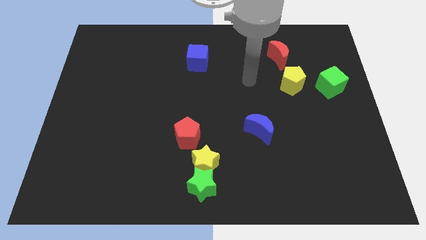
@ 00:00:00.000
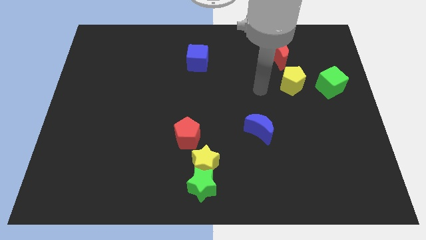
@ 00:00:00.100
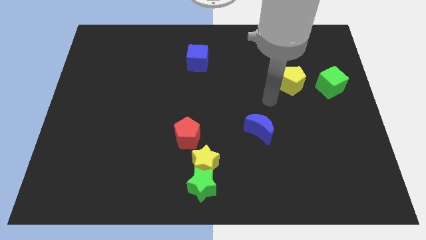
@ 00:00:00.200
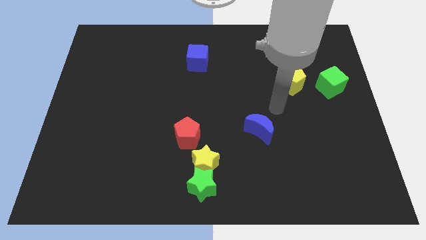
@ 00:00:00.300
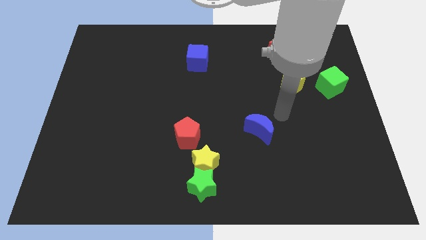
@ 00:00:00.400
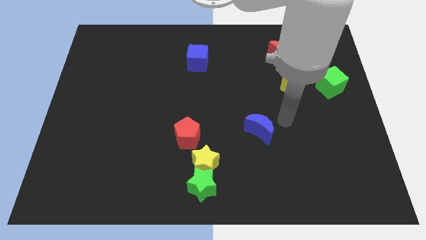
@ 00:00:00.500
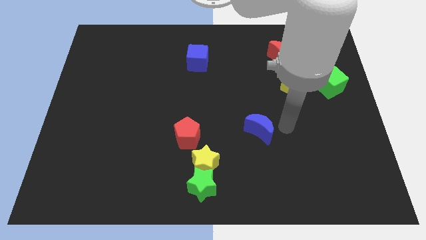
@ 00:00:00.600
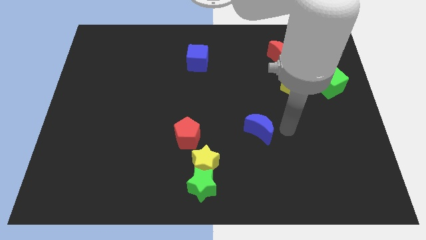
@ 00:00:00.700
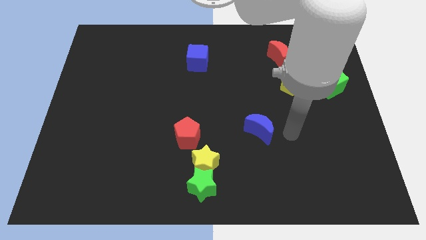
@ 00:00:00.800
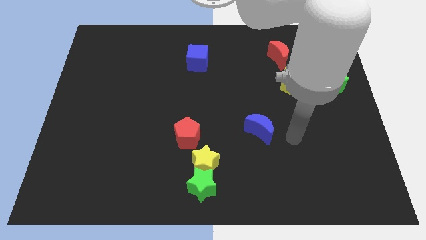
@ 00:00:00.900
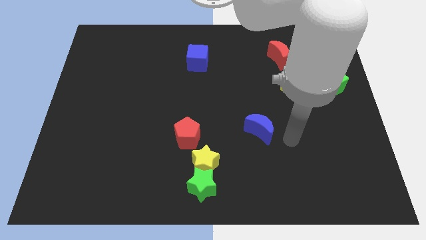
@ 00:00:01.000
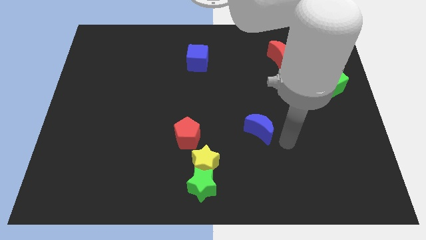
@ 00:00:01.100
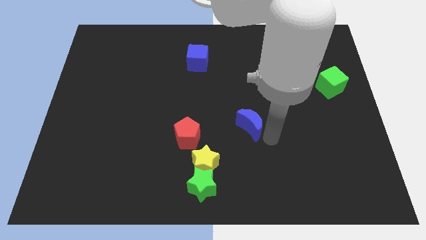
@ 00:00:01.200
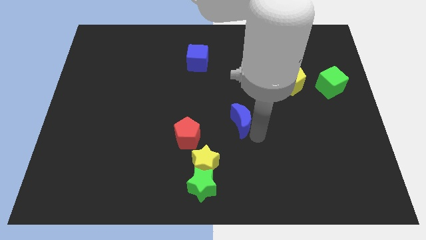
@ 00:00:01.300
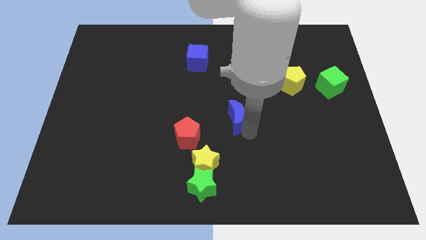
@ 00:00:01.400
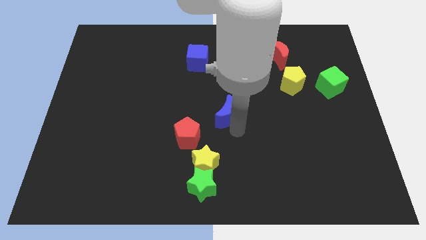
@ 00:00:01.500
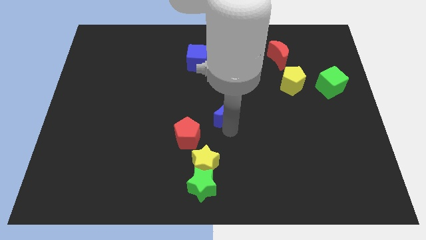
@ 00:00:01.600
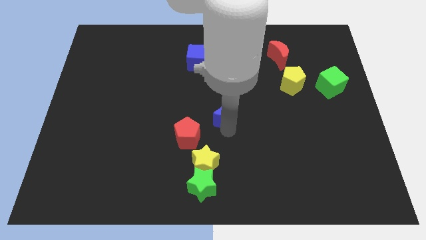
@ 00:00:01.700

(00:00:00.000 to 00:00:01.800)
put the blue moon diagonally top right to red pentagon

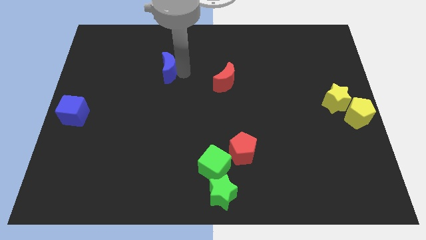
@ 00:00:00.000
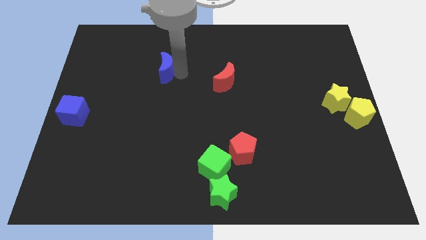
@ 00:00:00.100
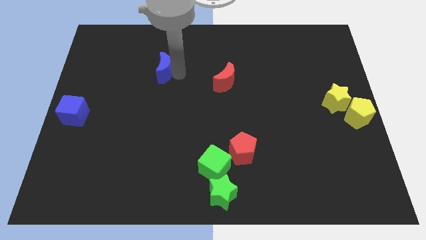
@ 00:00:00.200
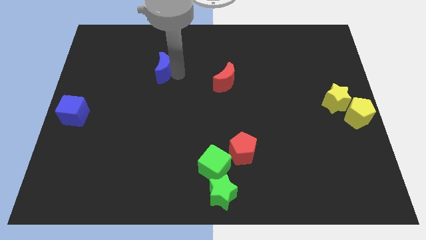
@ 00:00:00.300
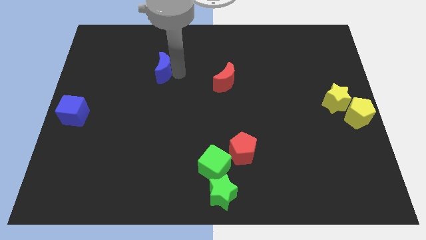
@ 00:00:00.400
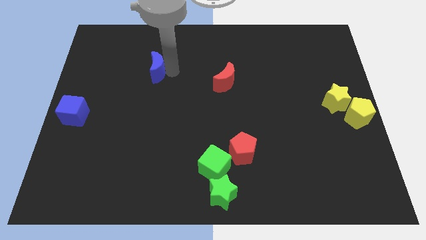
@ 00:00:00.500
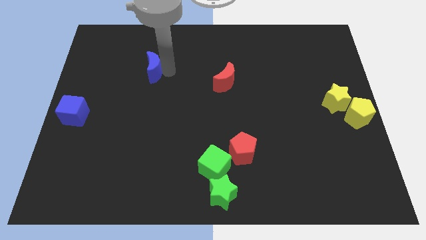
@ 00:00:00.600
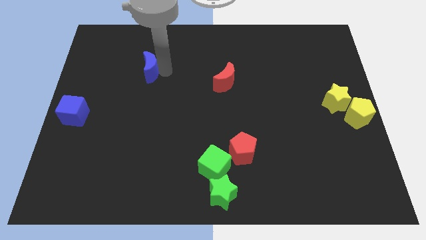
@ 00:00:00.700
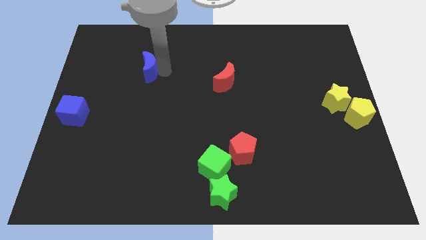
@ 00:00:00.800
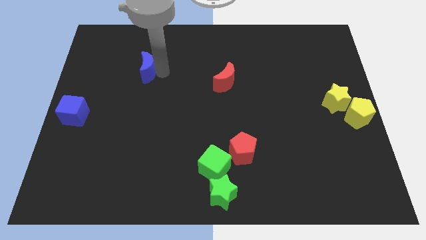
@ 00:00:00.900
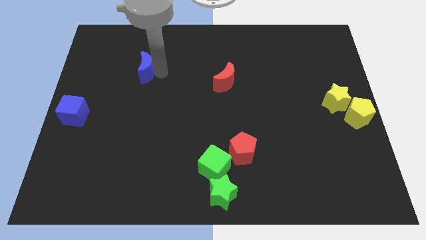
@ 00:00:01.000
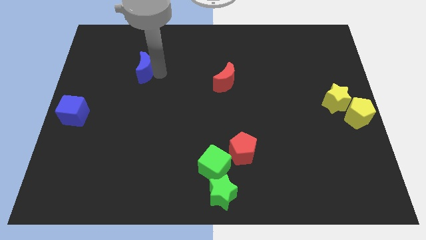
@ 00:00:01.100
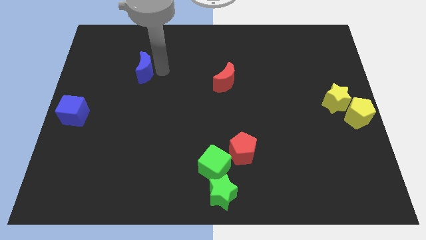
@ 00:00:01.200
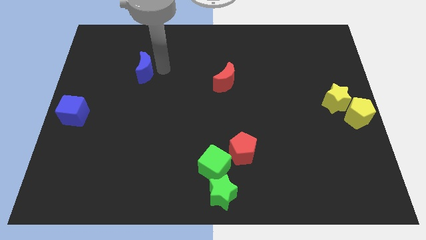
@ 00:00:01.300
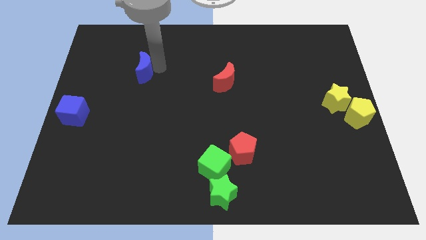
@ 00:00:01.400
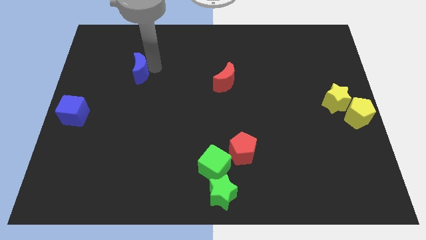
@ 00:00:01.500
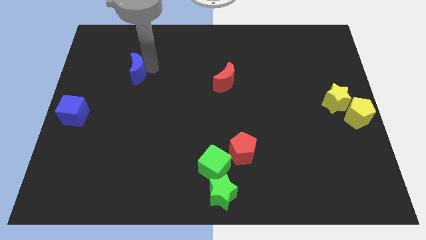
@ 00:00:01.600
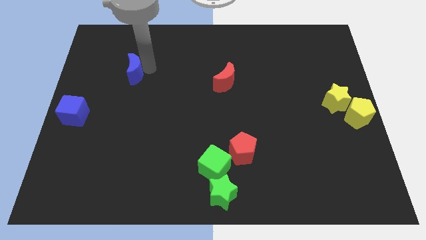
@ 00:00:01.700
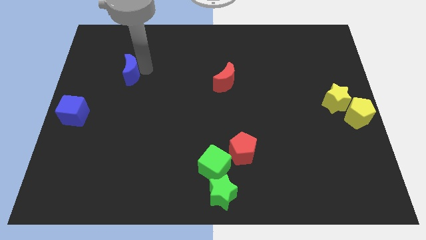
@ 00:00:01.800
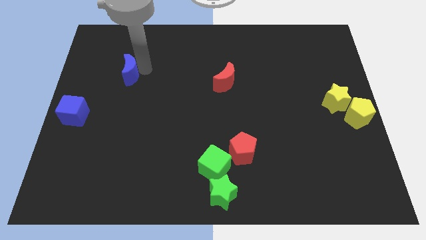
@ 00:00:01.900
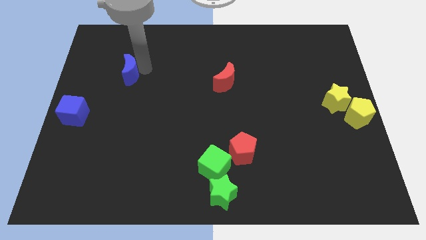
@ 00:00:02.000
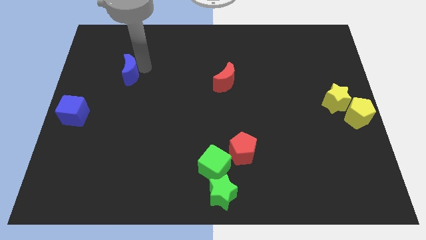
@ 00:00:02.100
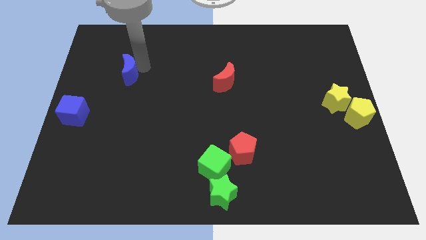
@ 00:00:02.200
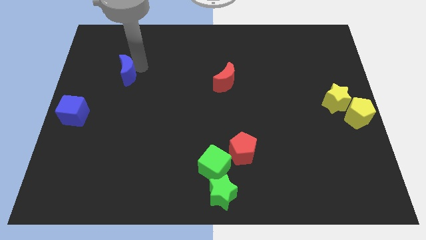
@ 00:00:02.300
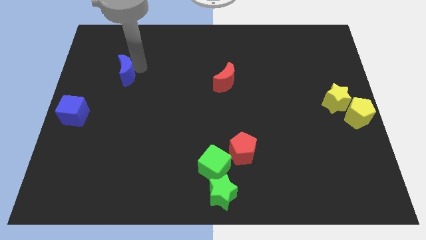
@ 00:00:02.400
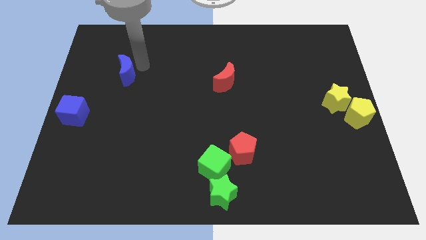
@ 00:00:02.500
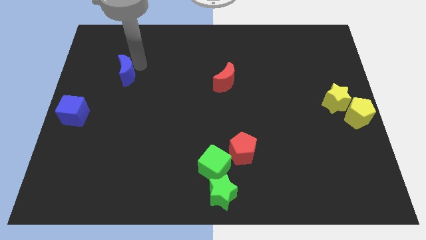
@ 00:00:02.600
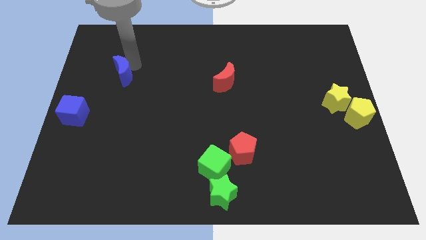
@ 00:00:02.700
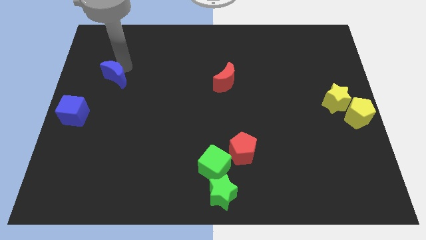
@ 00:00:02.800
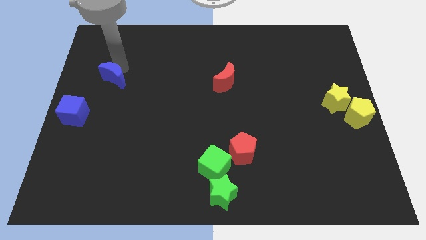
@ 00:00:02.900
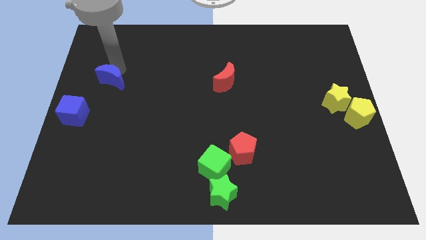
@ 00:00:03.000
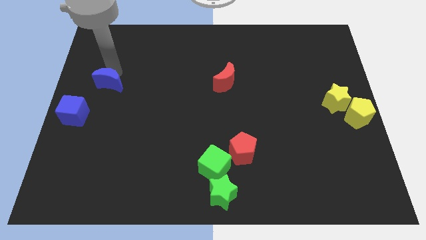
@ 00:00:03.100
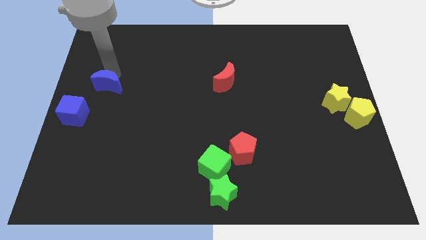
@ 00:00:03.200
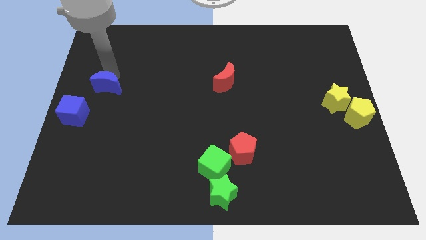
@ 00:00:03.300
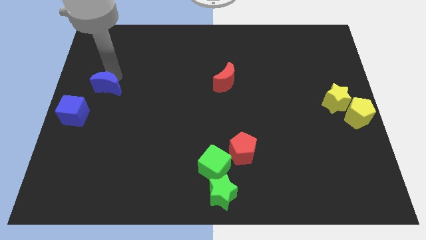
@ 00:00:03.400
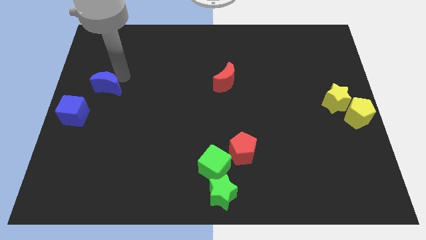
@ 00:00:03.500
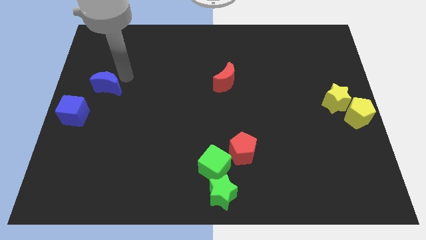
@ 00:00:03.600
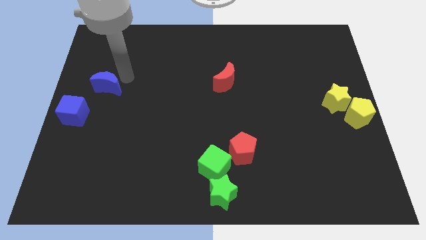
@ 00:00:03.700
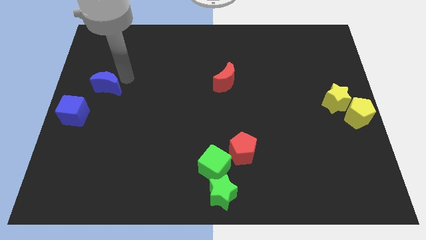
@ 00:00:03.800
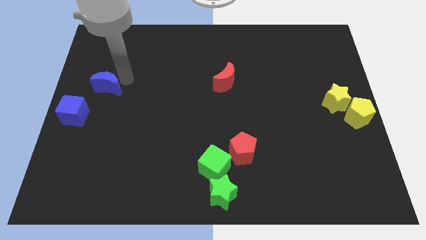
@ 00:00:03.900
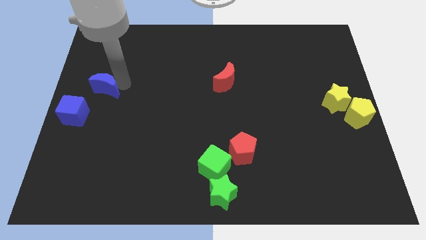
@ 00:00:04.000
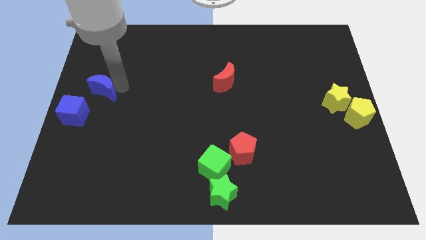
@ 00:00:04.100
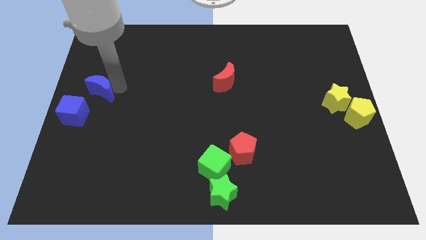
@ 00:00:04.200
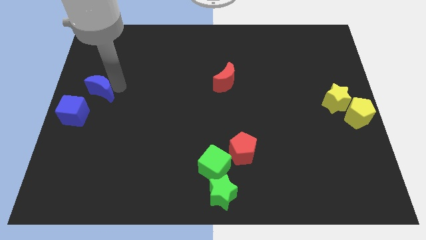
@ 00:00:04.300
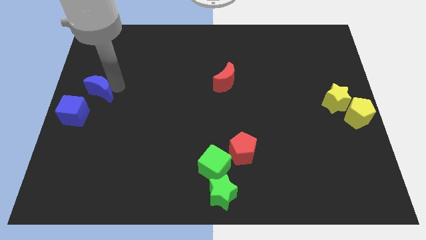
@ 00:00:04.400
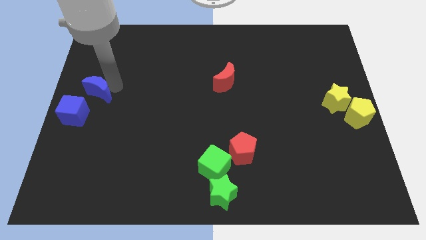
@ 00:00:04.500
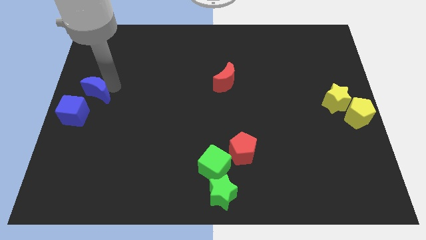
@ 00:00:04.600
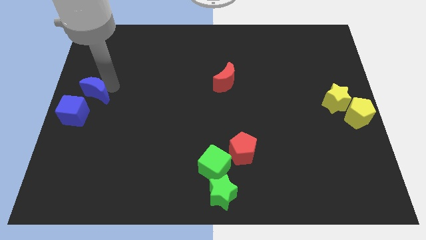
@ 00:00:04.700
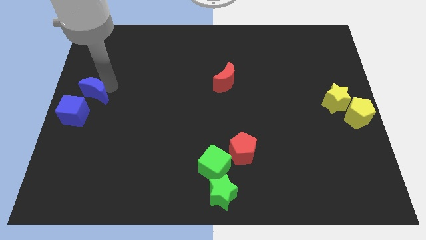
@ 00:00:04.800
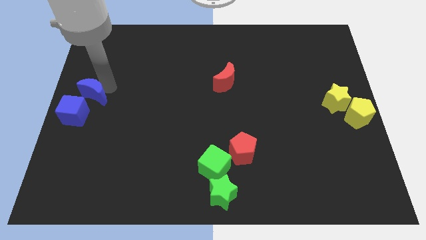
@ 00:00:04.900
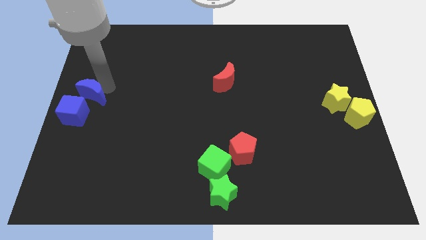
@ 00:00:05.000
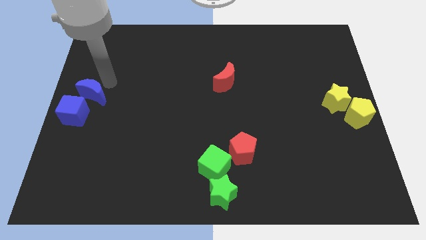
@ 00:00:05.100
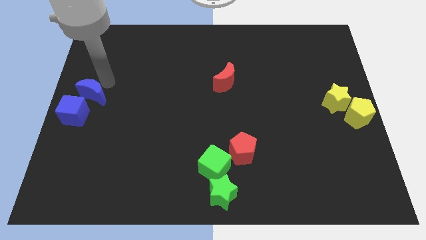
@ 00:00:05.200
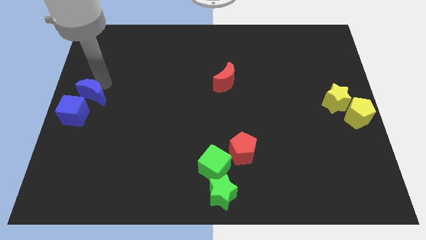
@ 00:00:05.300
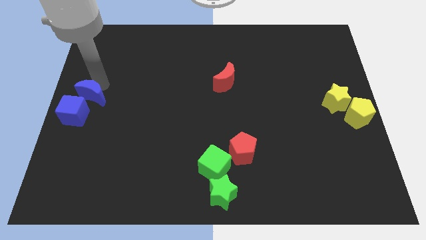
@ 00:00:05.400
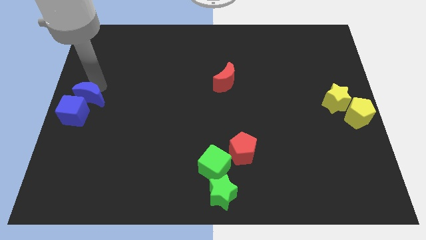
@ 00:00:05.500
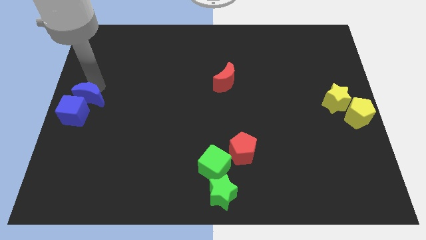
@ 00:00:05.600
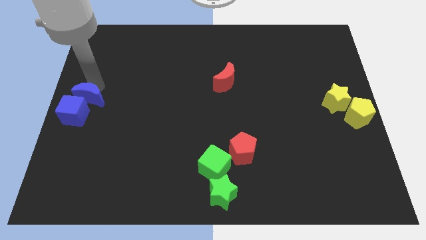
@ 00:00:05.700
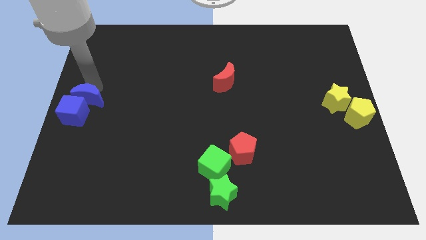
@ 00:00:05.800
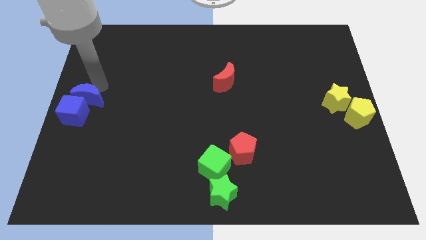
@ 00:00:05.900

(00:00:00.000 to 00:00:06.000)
push the blue moon above the blue cube

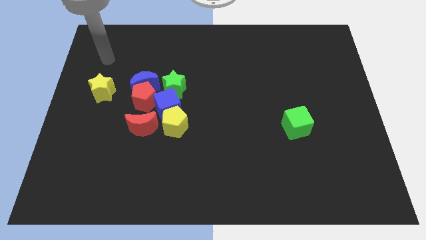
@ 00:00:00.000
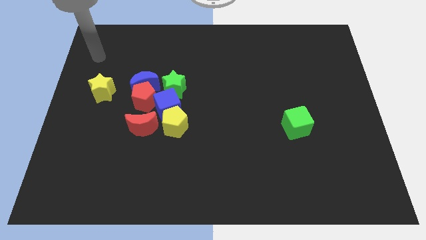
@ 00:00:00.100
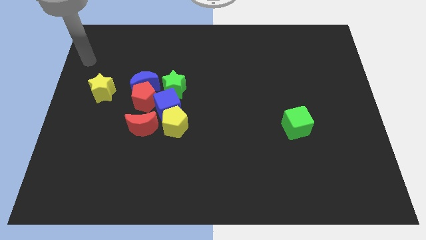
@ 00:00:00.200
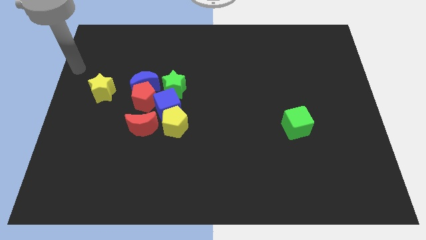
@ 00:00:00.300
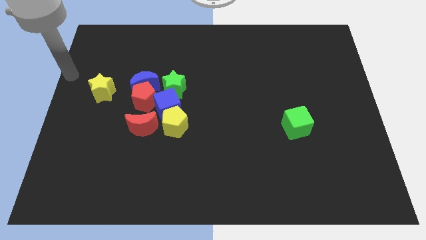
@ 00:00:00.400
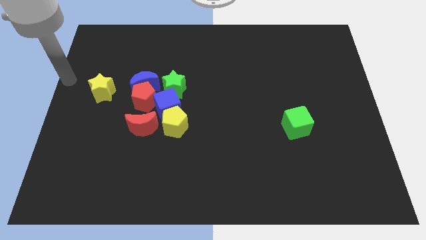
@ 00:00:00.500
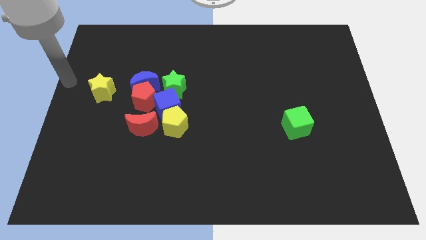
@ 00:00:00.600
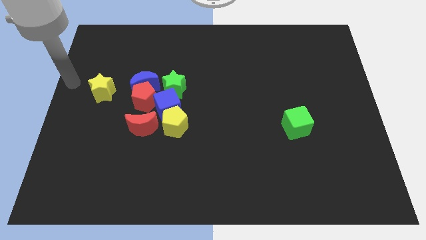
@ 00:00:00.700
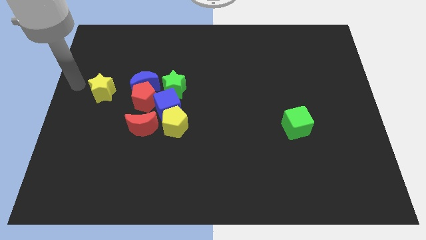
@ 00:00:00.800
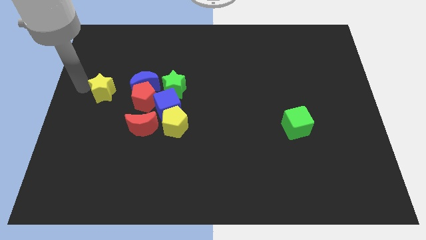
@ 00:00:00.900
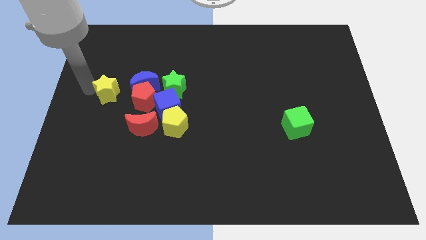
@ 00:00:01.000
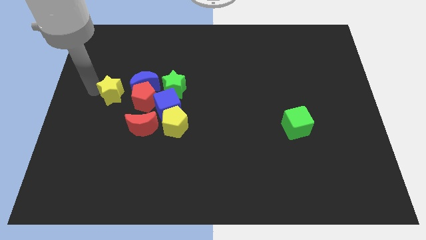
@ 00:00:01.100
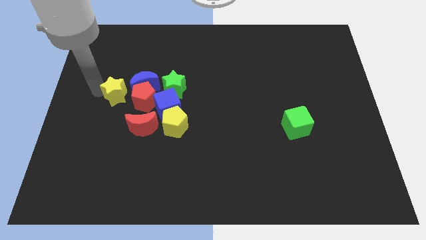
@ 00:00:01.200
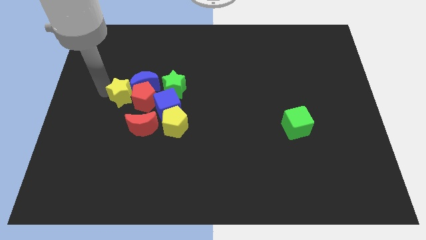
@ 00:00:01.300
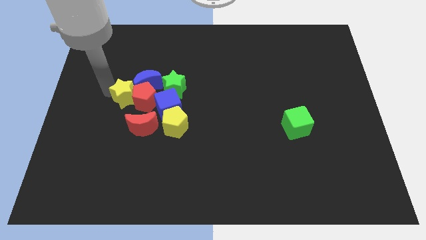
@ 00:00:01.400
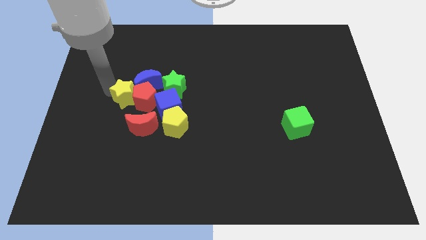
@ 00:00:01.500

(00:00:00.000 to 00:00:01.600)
move the yellow star to the right of the red pentagon
